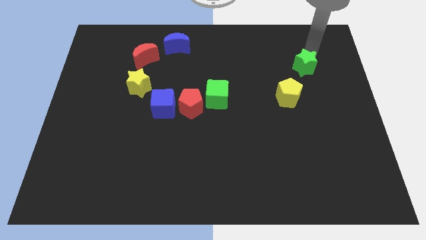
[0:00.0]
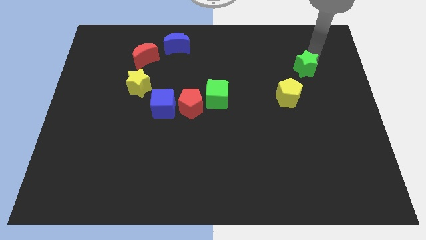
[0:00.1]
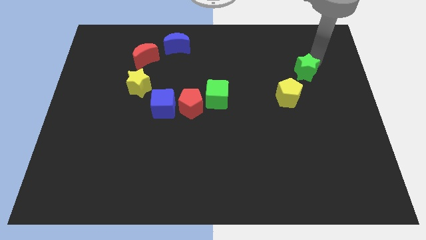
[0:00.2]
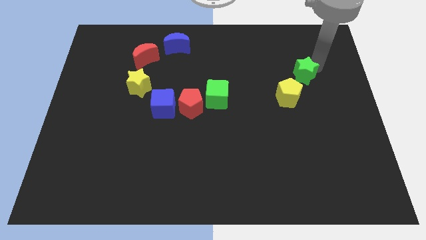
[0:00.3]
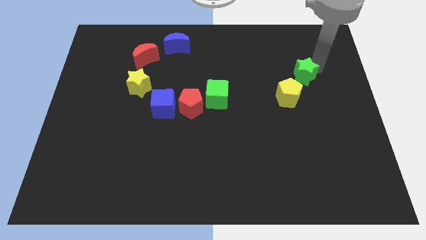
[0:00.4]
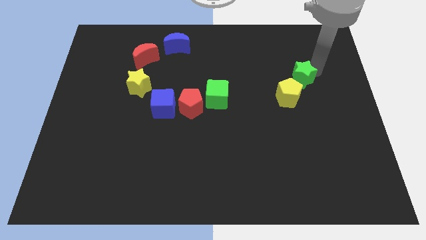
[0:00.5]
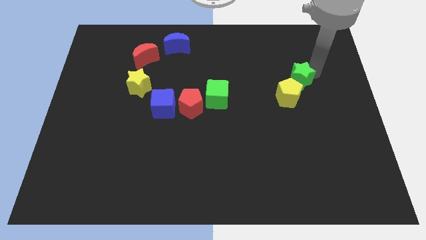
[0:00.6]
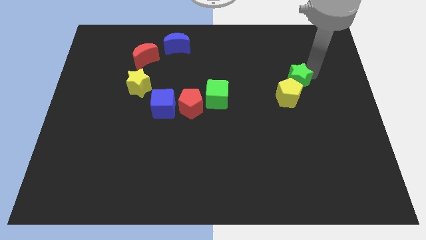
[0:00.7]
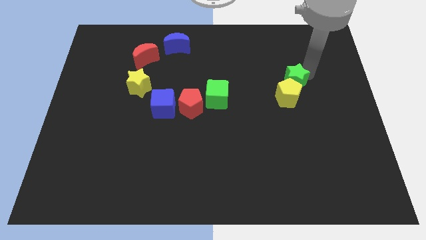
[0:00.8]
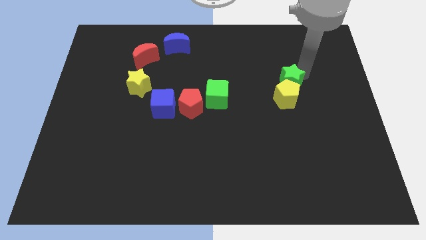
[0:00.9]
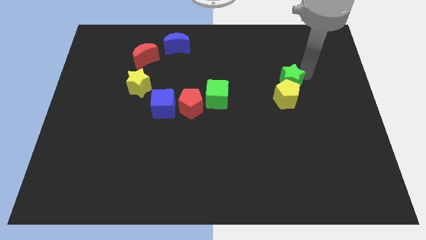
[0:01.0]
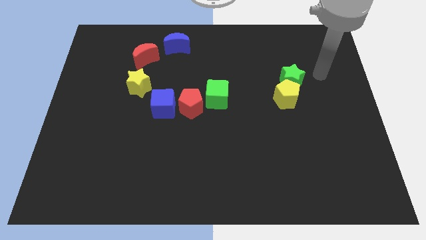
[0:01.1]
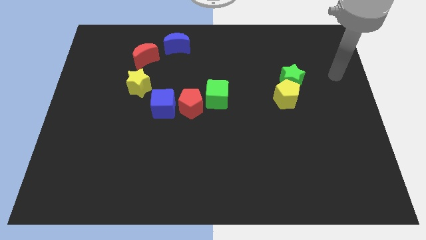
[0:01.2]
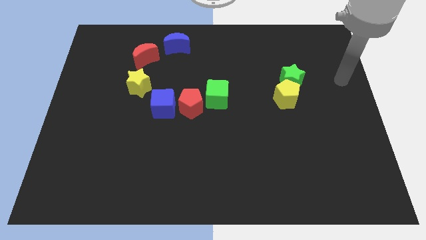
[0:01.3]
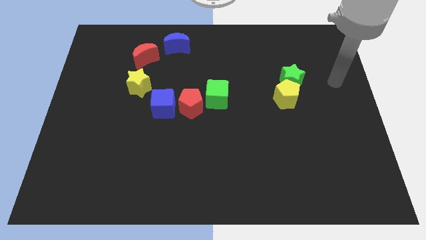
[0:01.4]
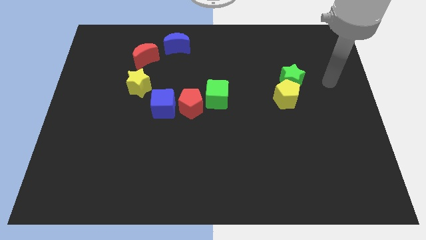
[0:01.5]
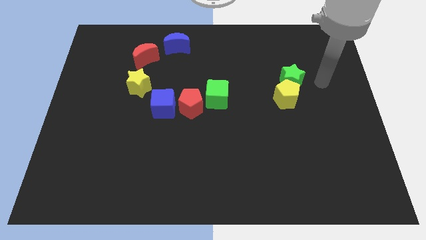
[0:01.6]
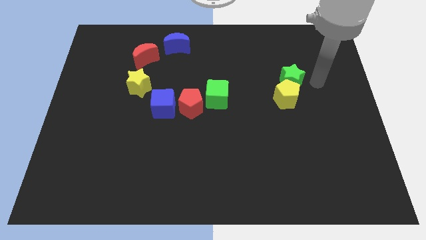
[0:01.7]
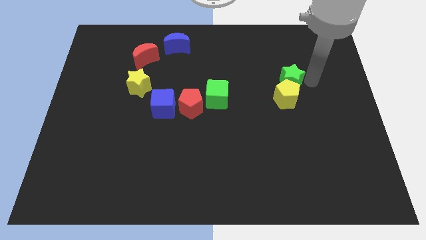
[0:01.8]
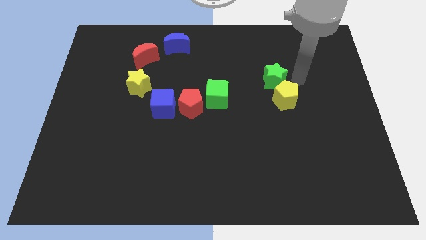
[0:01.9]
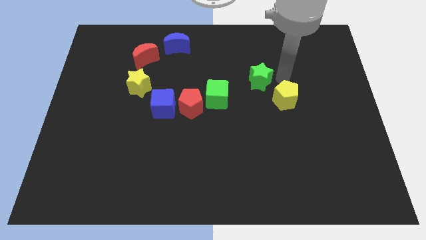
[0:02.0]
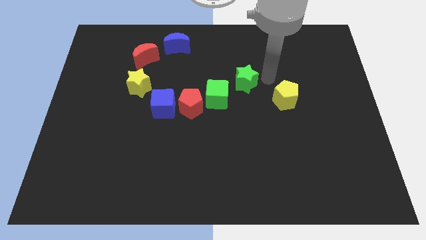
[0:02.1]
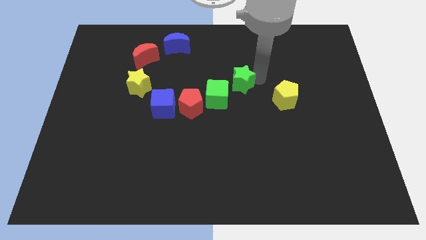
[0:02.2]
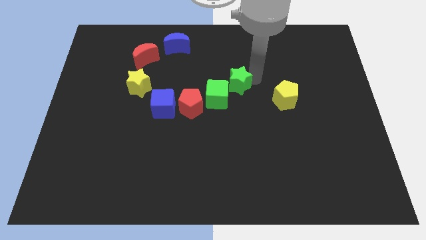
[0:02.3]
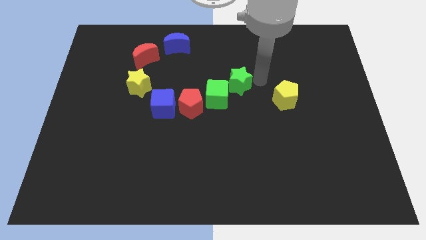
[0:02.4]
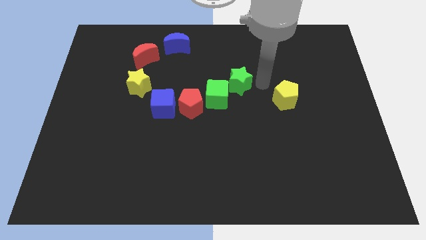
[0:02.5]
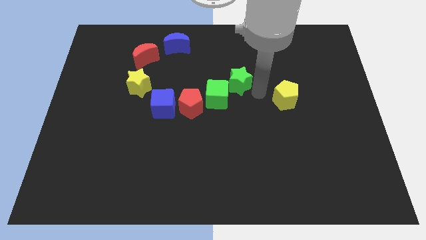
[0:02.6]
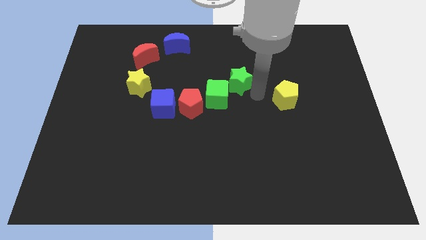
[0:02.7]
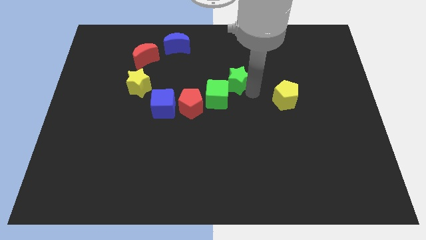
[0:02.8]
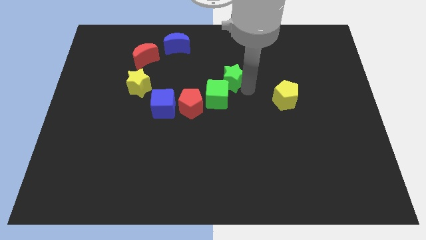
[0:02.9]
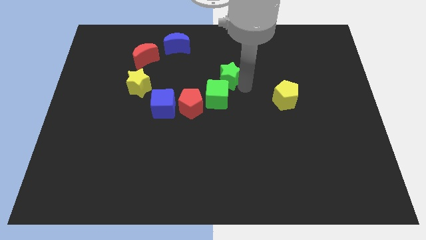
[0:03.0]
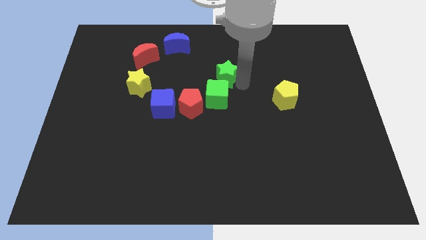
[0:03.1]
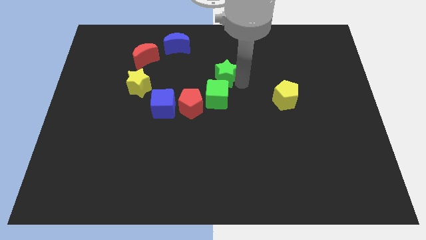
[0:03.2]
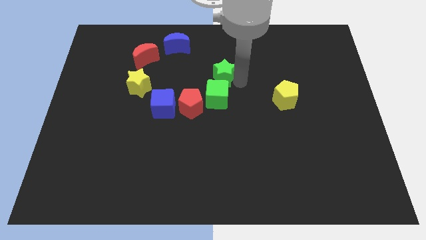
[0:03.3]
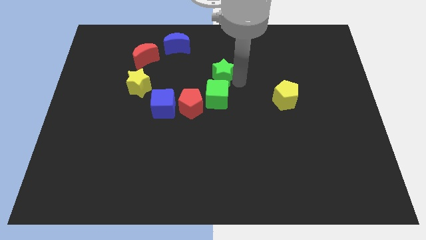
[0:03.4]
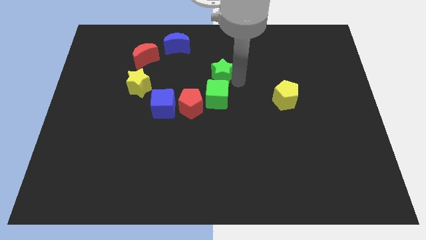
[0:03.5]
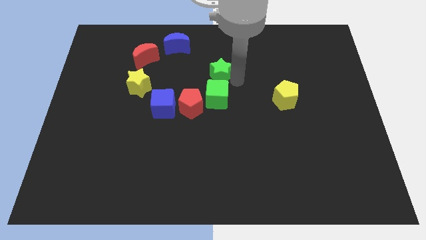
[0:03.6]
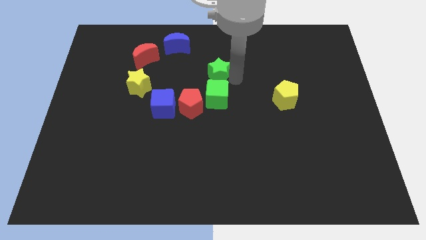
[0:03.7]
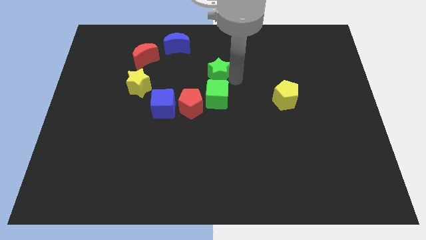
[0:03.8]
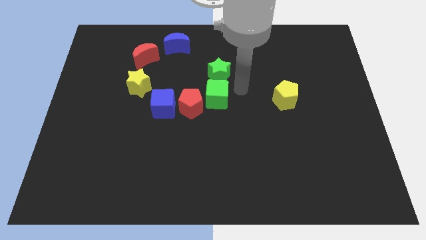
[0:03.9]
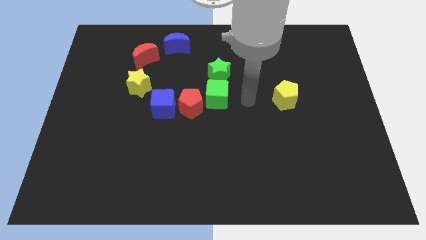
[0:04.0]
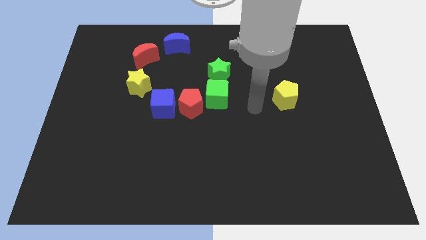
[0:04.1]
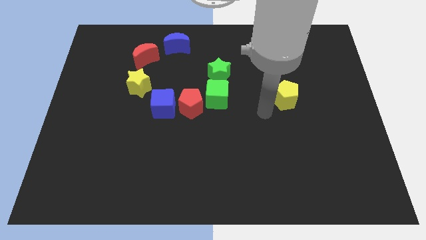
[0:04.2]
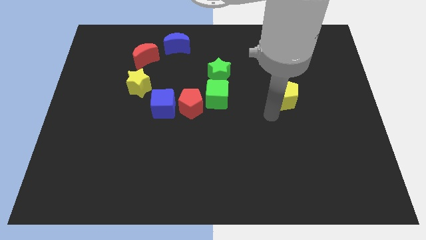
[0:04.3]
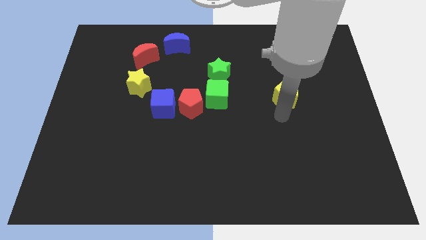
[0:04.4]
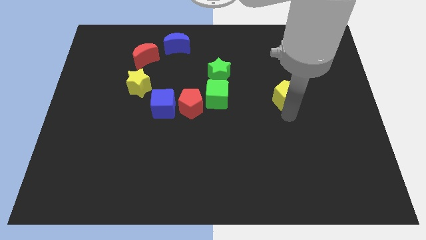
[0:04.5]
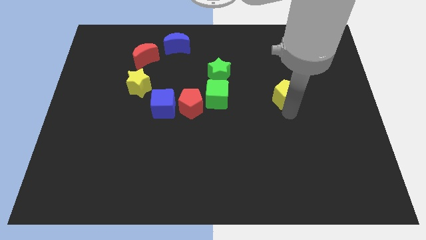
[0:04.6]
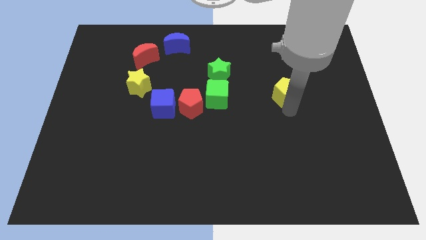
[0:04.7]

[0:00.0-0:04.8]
place the green star to the top of green cube

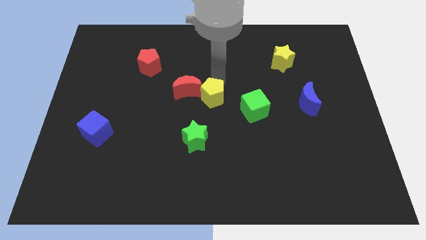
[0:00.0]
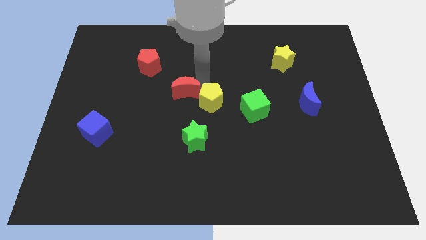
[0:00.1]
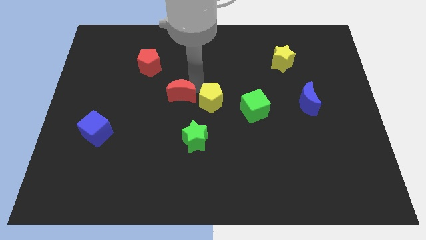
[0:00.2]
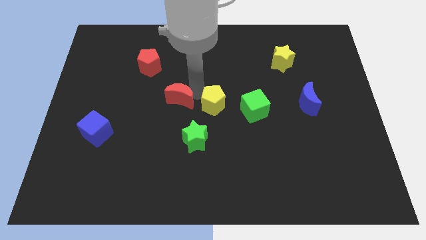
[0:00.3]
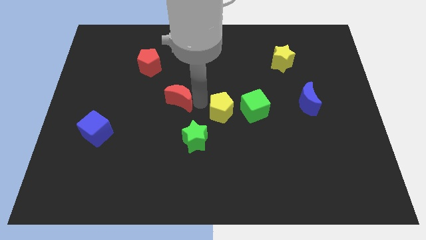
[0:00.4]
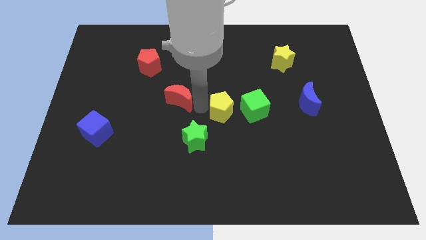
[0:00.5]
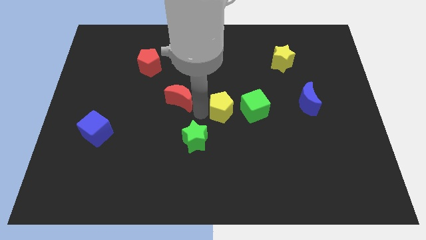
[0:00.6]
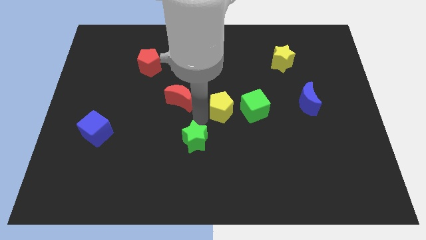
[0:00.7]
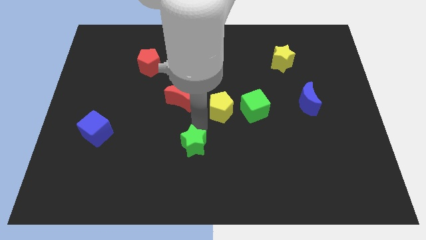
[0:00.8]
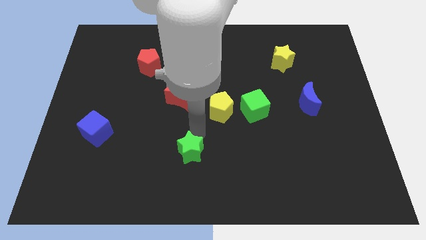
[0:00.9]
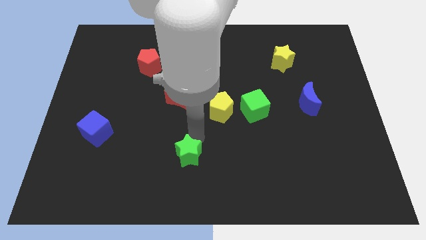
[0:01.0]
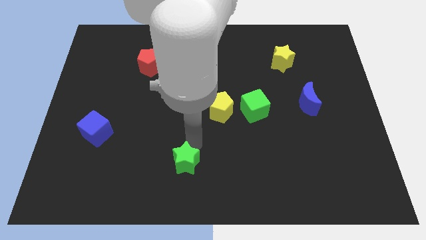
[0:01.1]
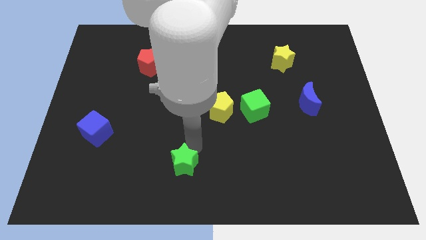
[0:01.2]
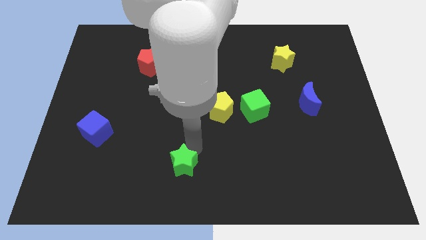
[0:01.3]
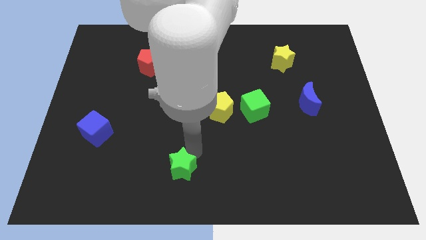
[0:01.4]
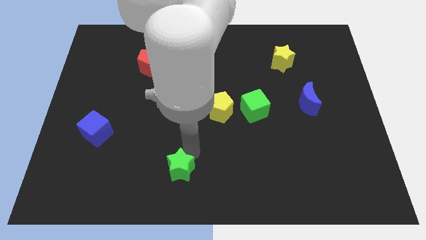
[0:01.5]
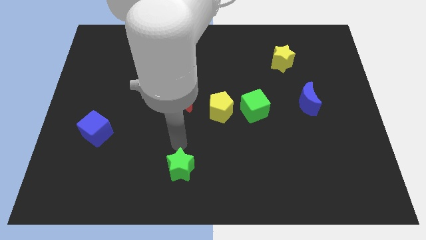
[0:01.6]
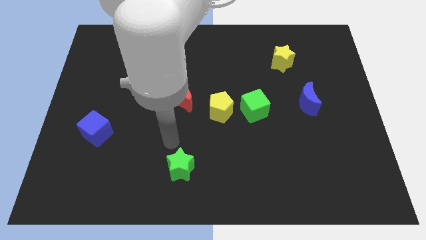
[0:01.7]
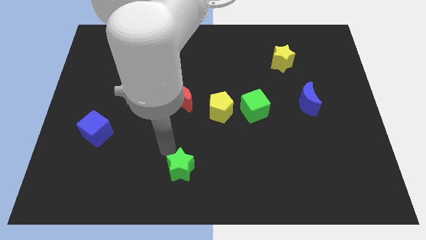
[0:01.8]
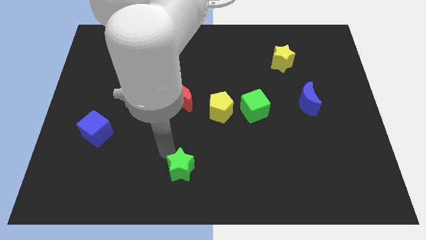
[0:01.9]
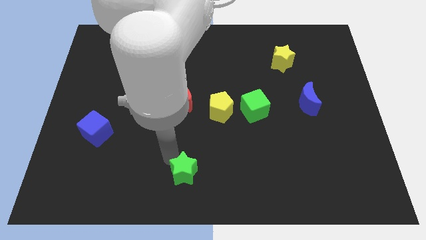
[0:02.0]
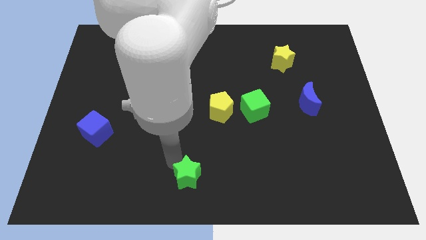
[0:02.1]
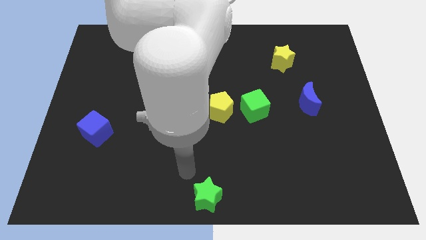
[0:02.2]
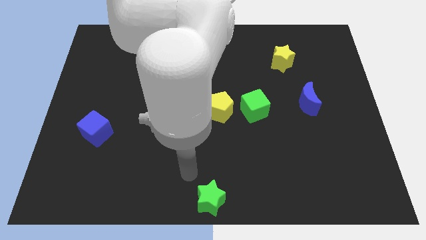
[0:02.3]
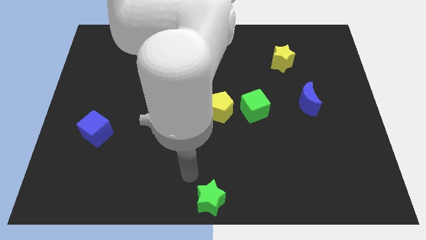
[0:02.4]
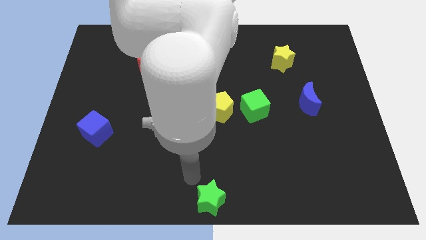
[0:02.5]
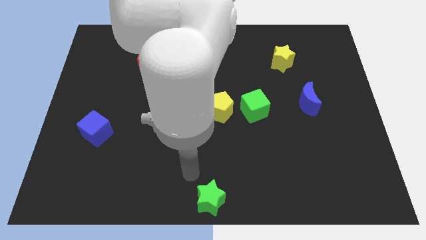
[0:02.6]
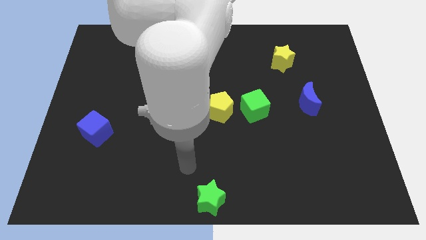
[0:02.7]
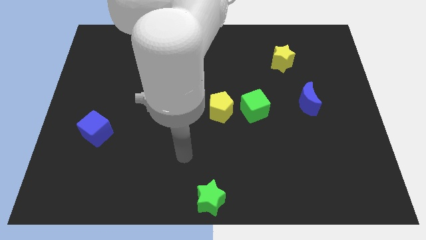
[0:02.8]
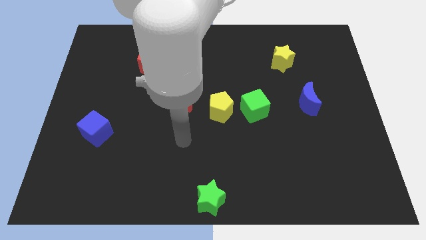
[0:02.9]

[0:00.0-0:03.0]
move the star to the bottom middle of the board

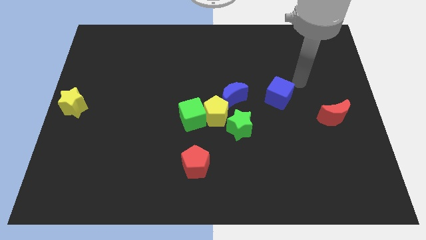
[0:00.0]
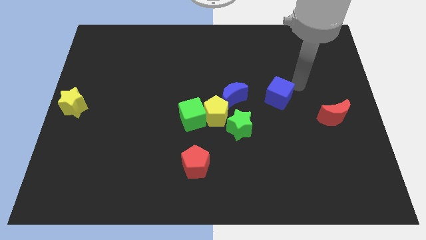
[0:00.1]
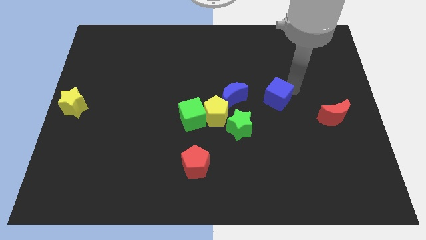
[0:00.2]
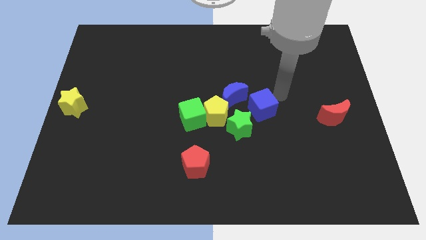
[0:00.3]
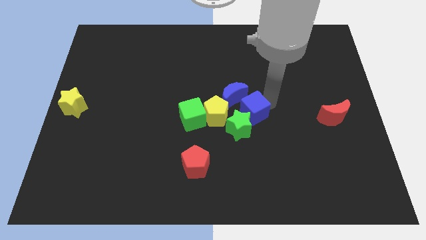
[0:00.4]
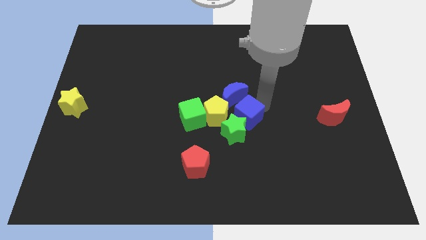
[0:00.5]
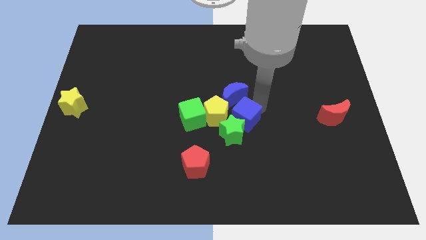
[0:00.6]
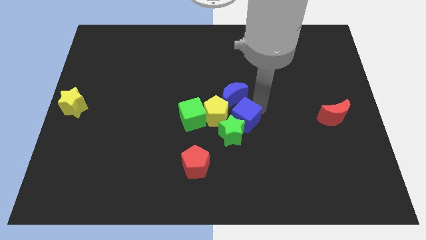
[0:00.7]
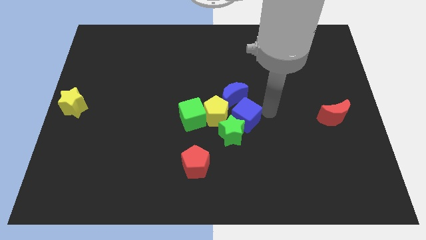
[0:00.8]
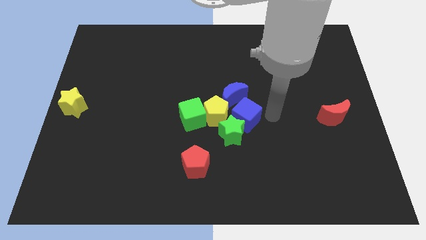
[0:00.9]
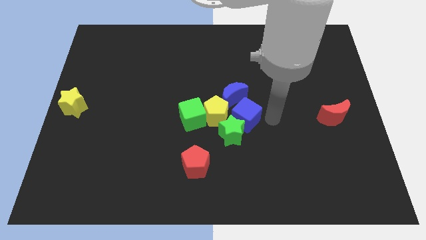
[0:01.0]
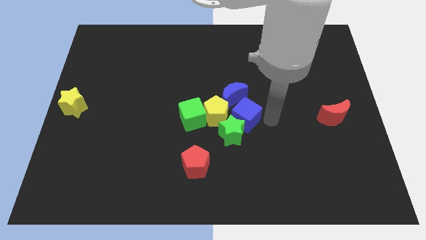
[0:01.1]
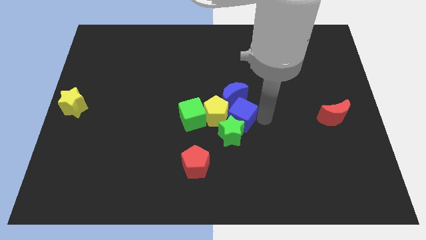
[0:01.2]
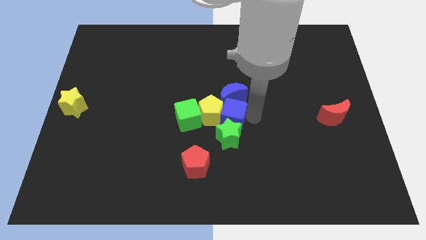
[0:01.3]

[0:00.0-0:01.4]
push the green star using the blue cube
